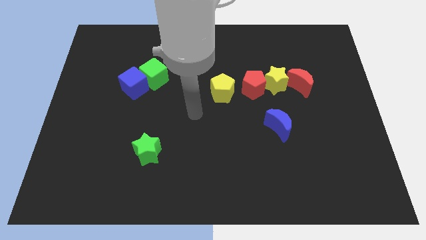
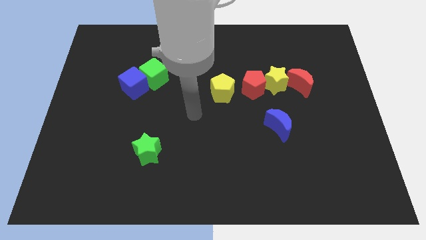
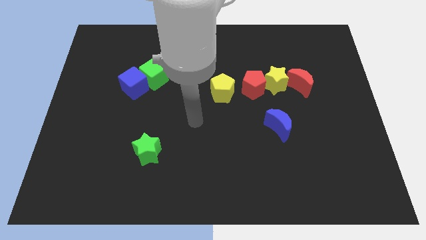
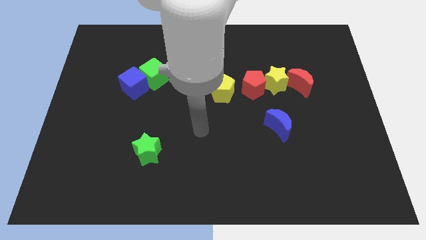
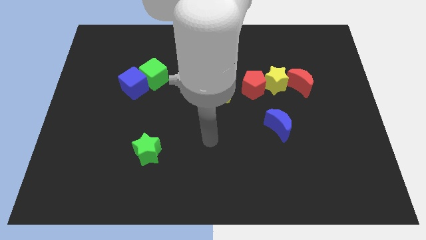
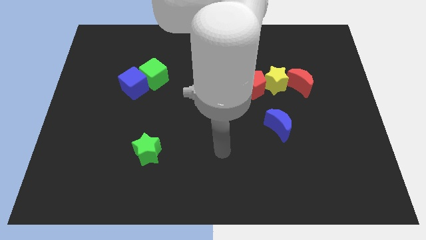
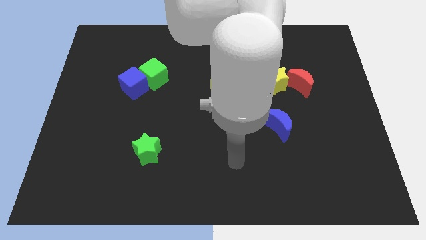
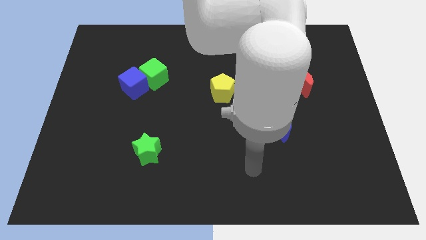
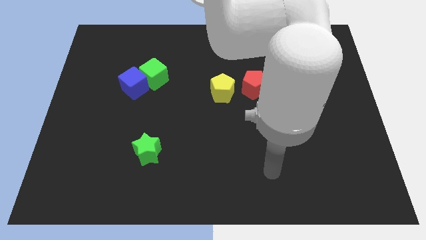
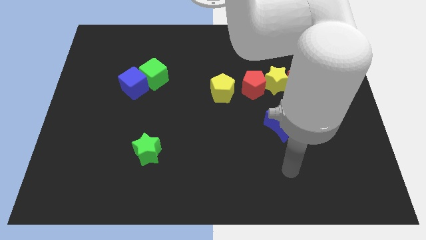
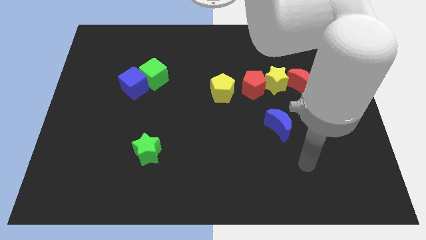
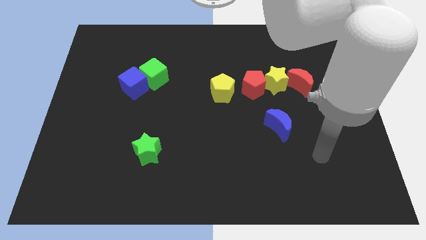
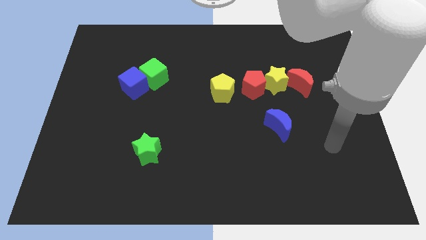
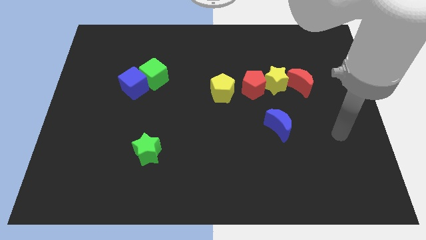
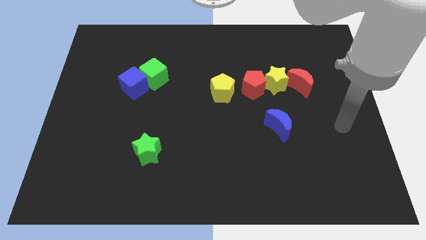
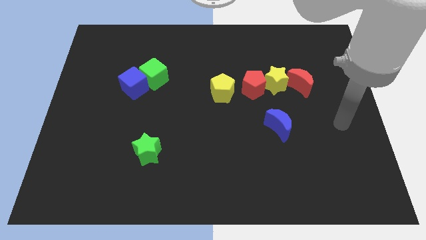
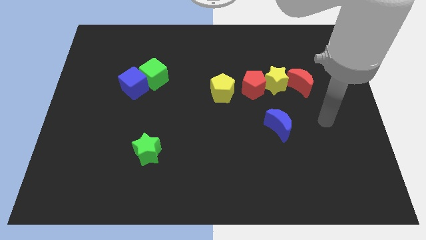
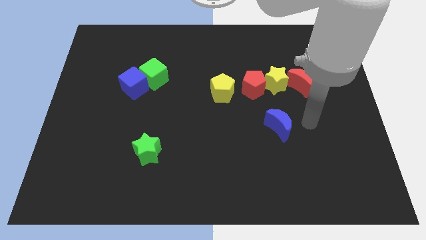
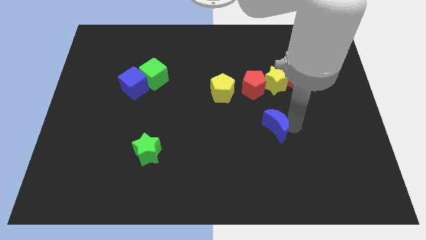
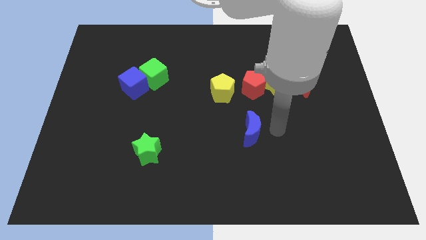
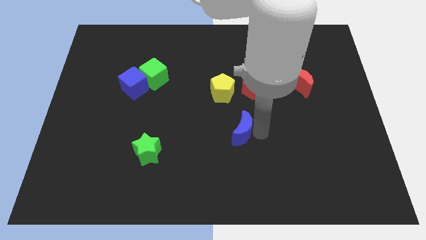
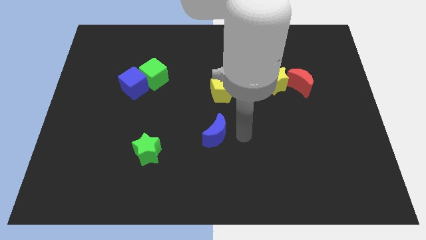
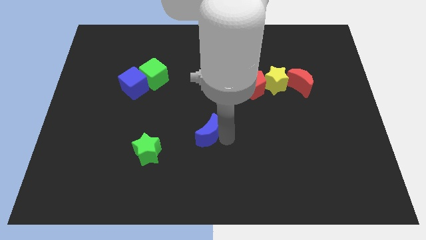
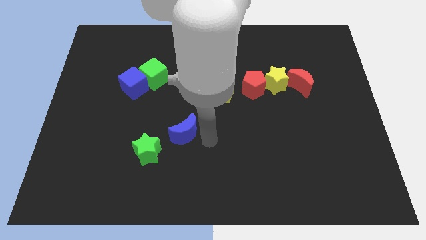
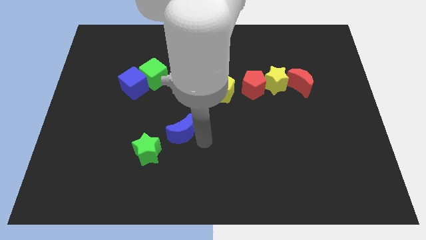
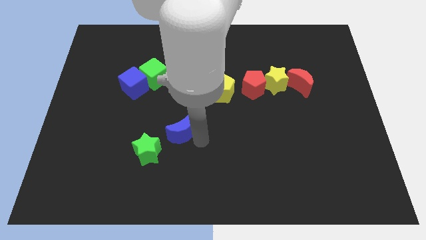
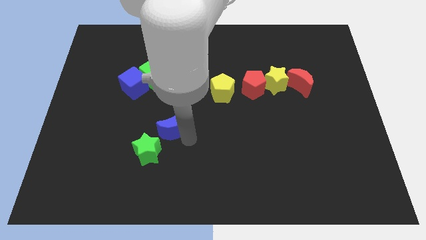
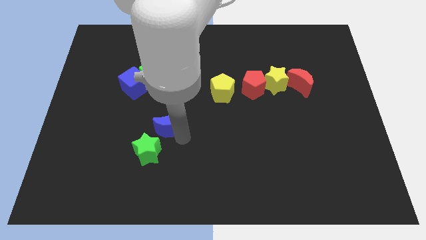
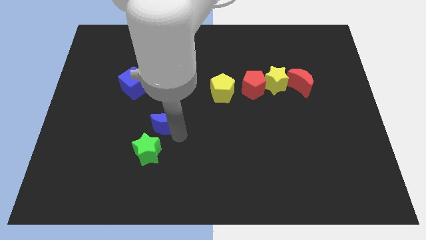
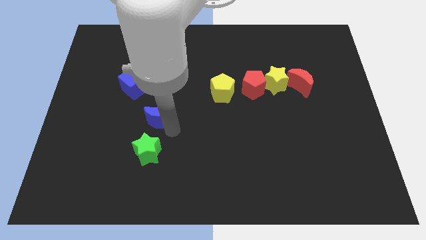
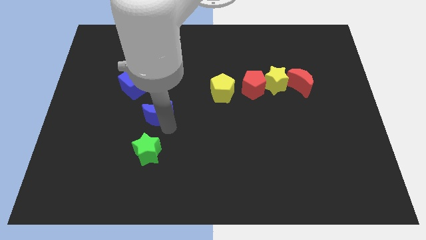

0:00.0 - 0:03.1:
place blue moon above green star

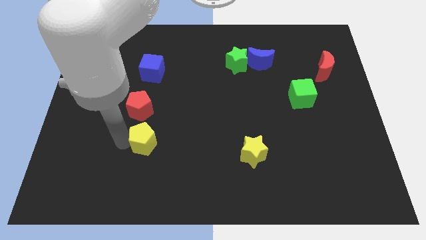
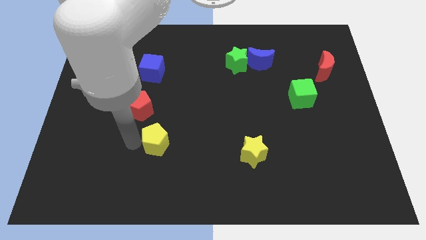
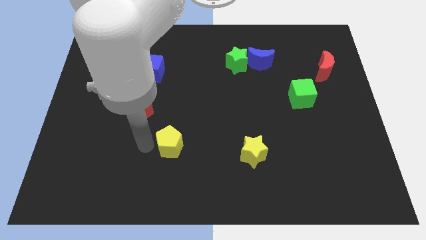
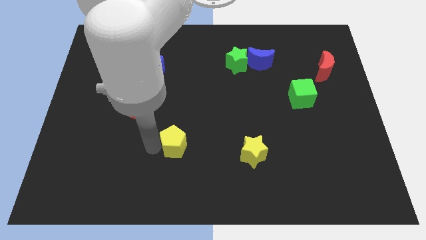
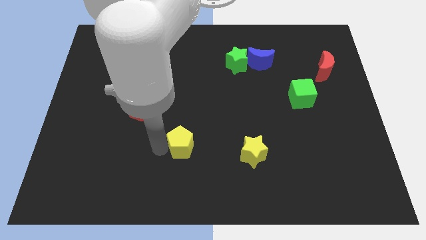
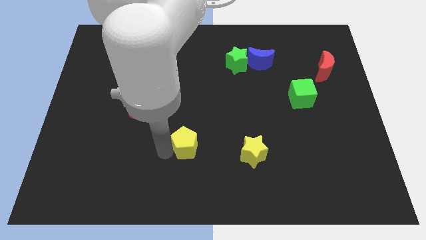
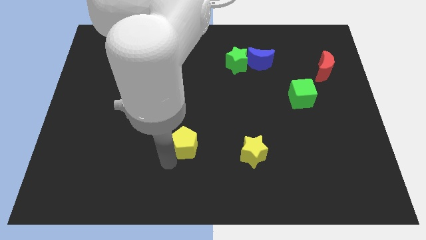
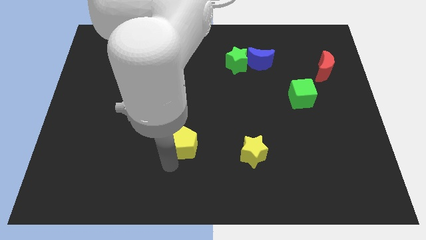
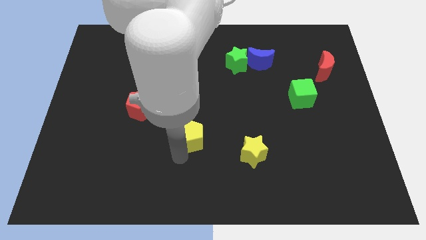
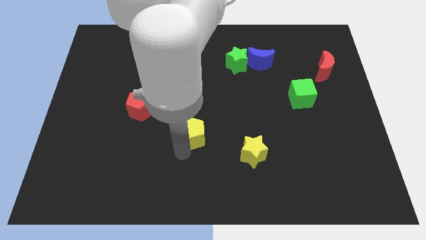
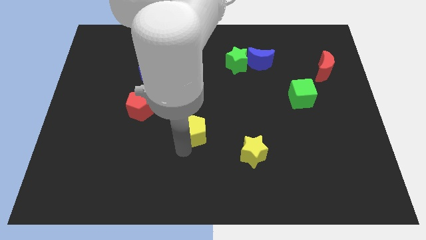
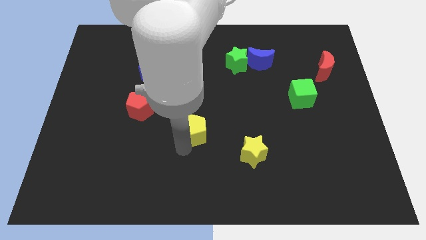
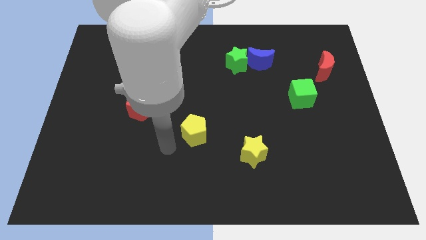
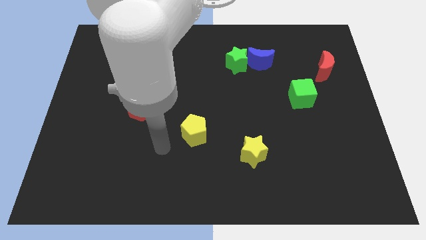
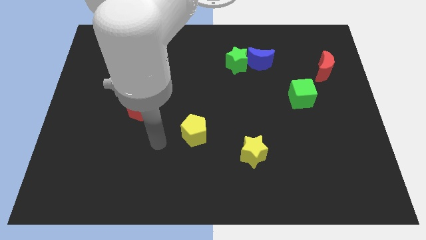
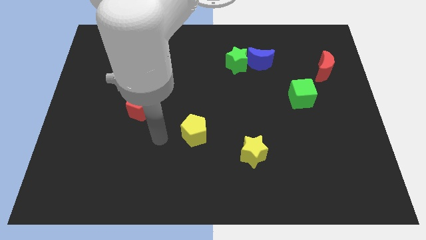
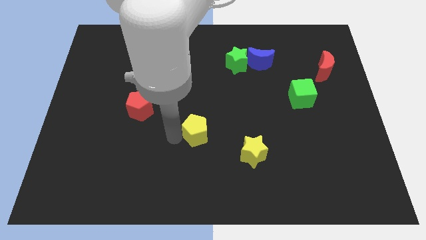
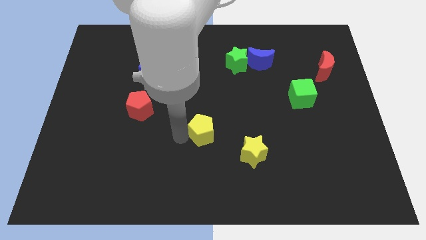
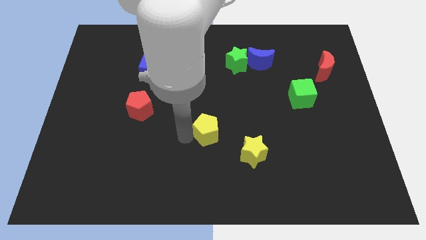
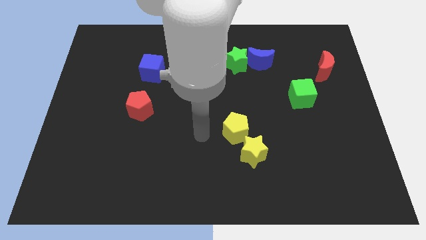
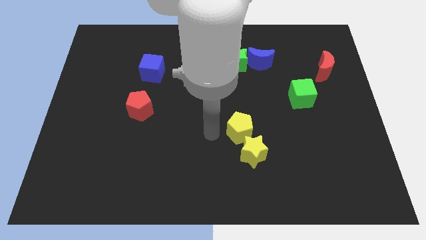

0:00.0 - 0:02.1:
move the yellow pentagon close to the yellow star

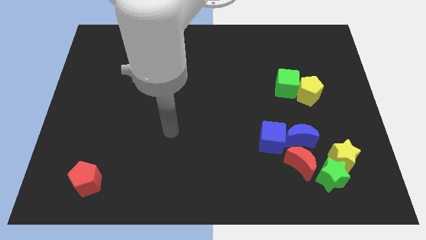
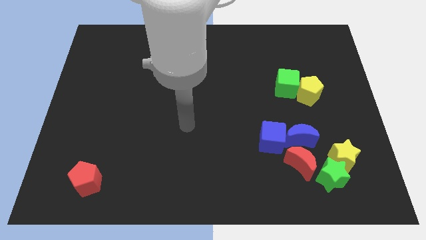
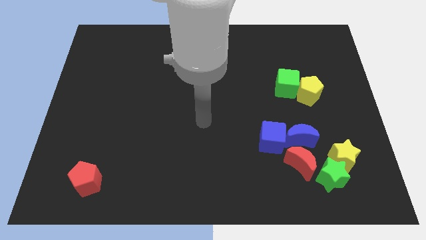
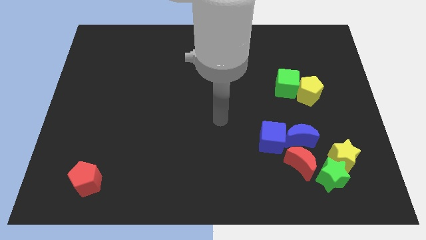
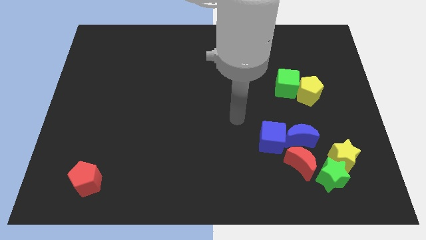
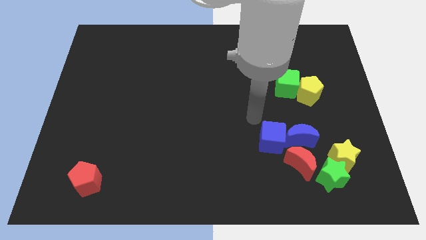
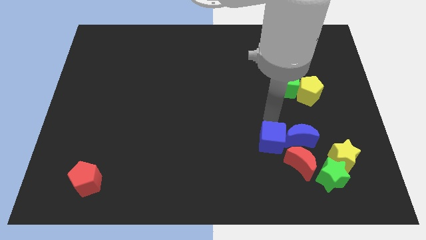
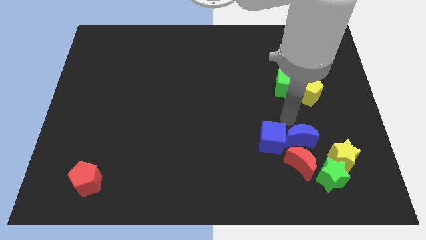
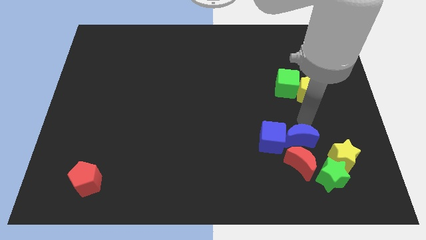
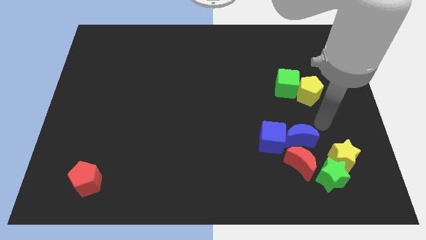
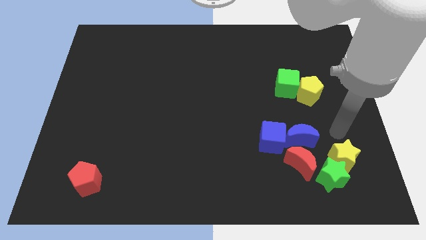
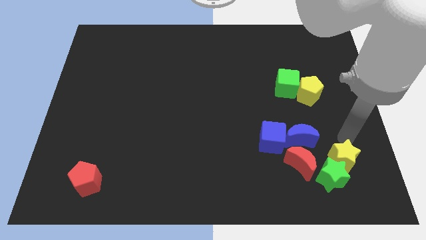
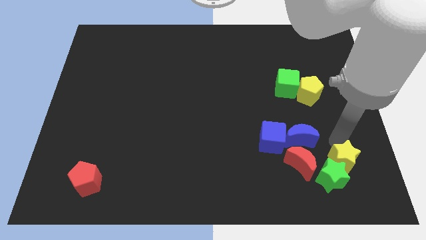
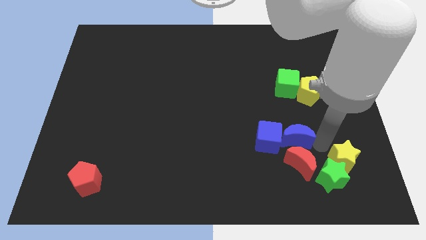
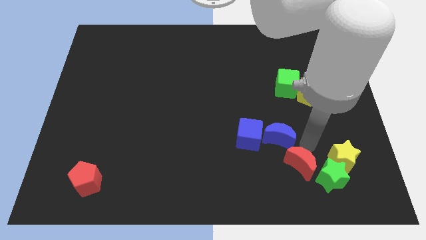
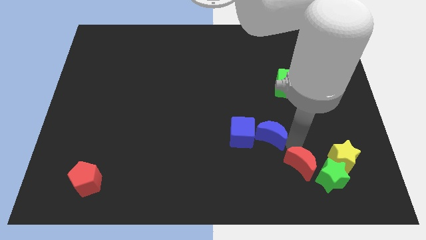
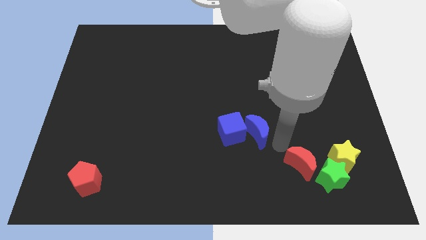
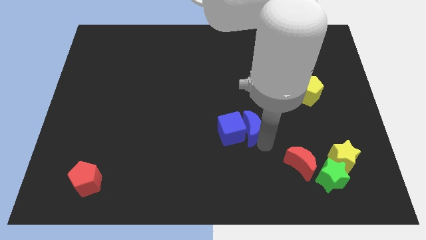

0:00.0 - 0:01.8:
slightly push the blue blocks to the left

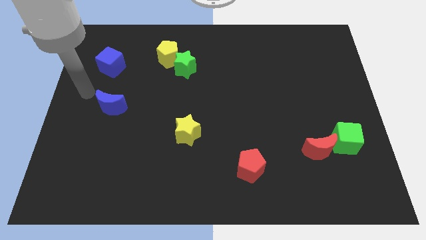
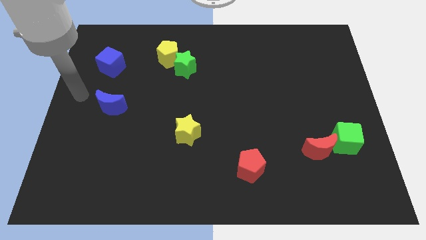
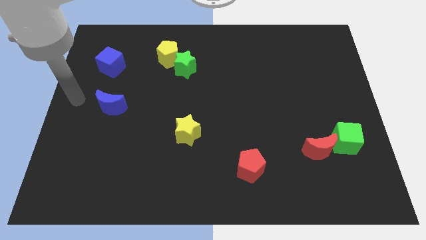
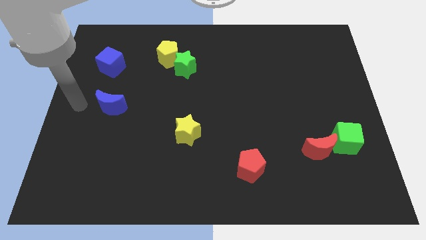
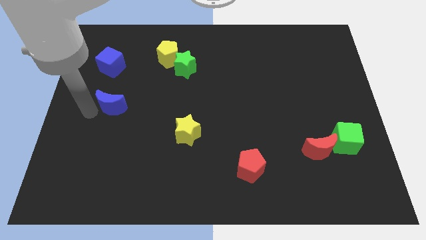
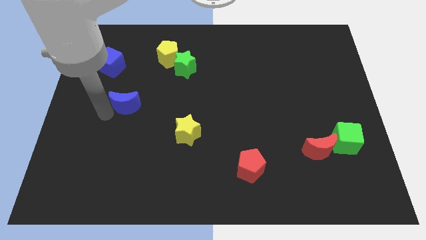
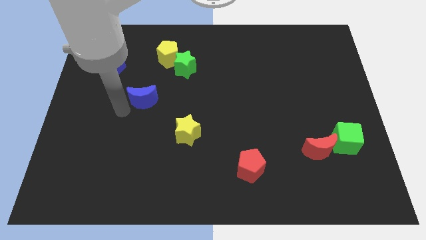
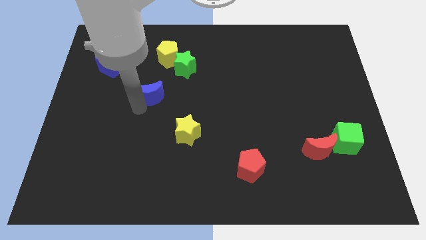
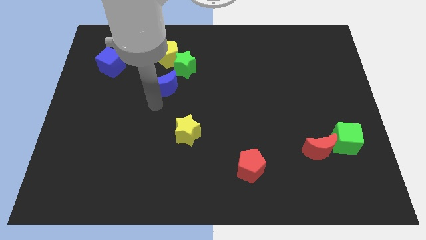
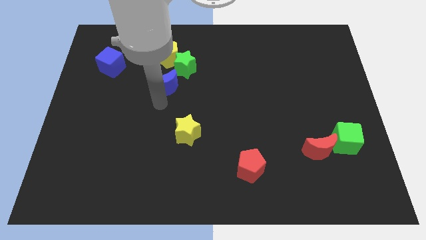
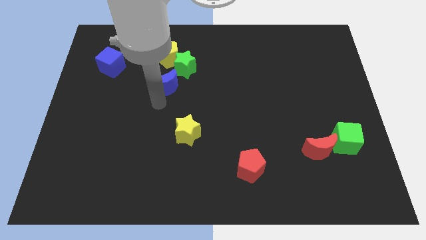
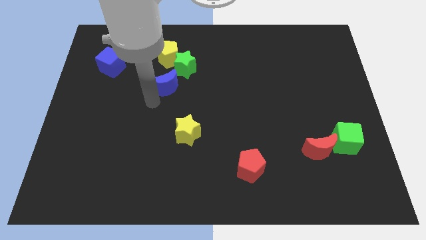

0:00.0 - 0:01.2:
move the blue crescent to the bottom left of the green star

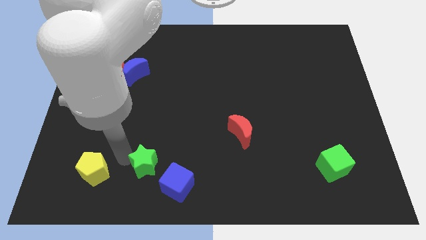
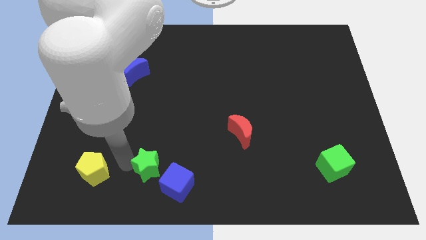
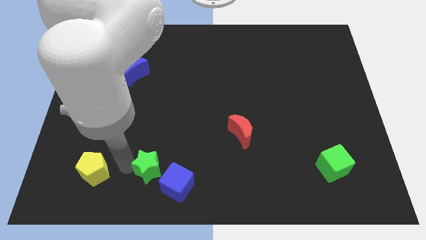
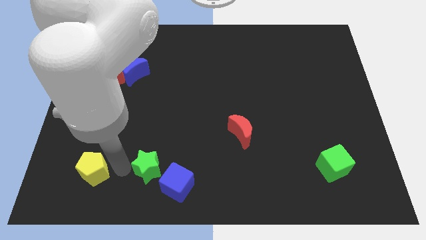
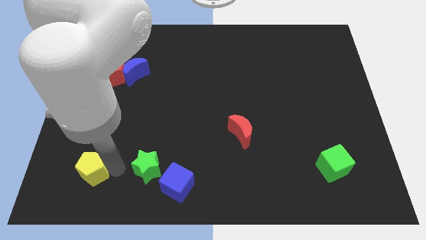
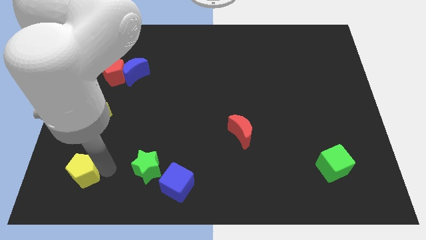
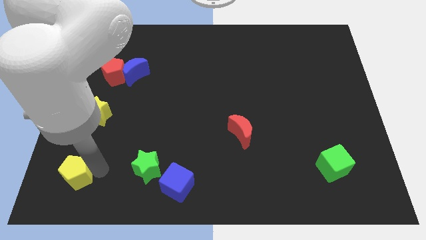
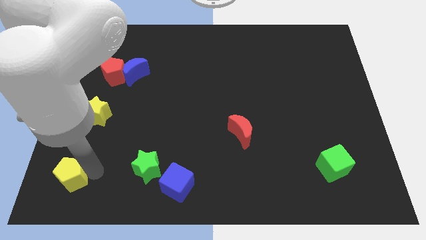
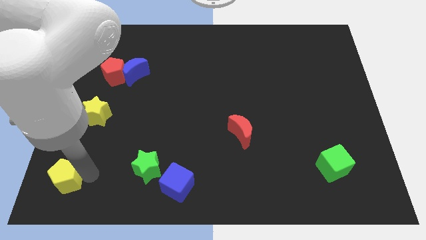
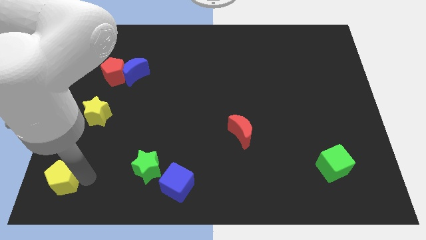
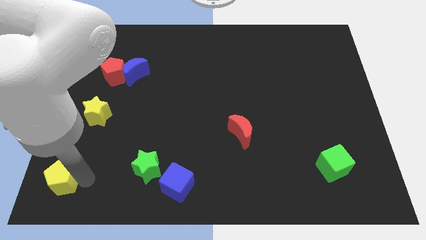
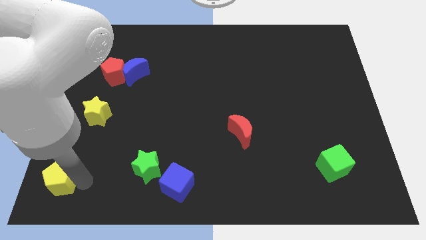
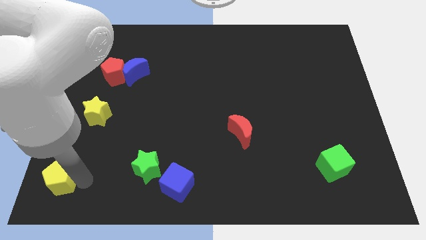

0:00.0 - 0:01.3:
push the yellow pentagon to the left
